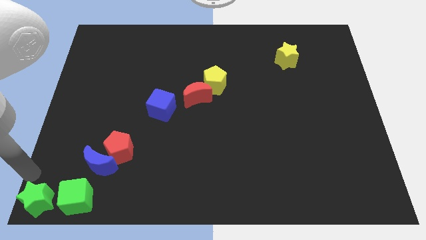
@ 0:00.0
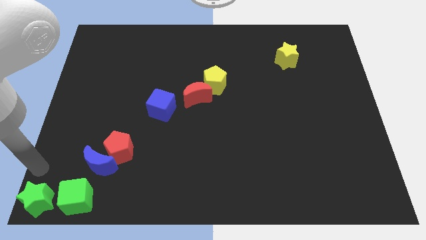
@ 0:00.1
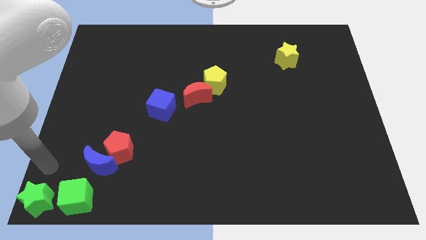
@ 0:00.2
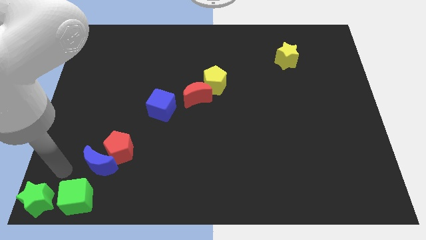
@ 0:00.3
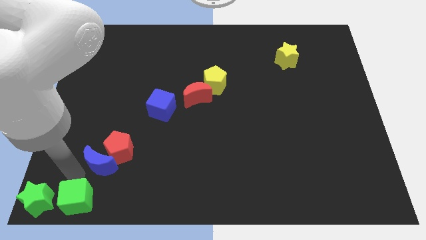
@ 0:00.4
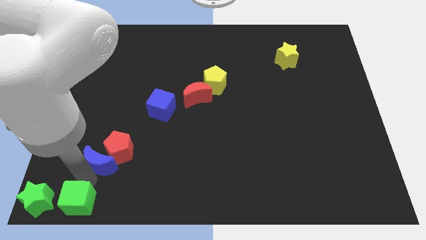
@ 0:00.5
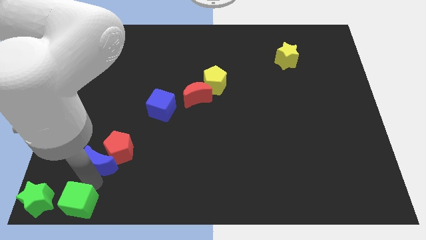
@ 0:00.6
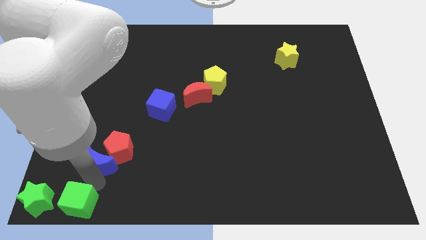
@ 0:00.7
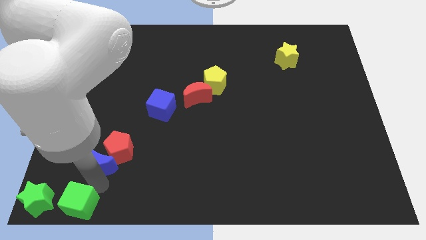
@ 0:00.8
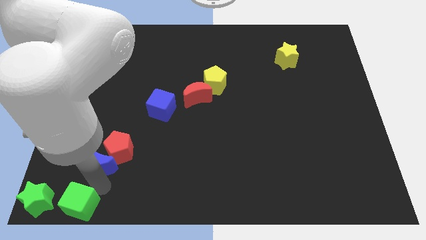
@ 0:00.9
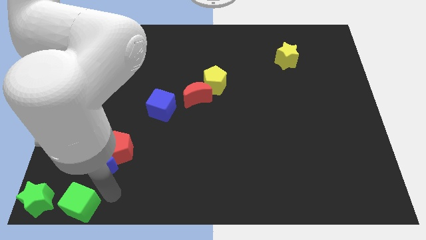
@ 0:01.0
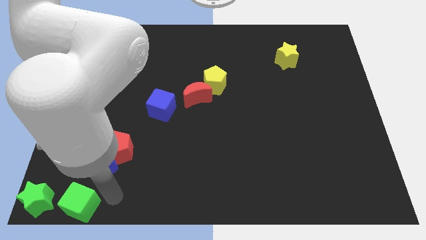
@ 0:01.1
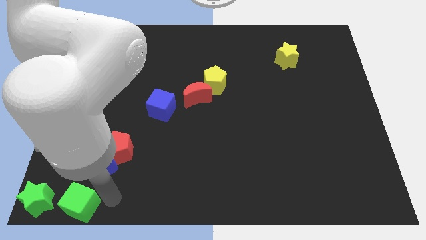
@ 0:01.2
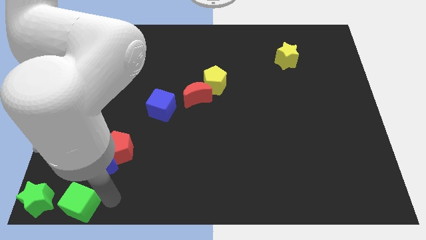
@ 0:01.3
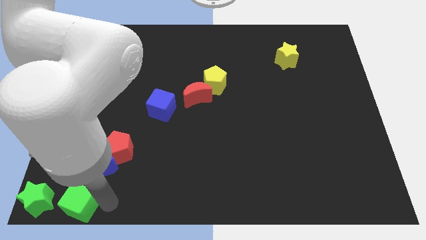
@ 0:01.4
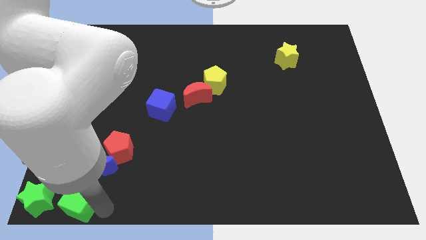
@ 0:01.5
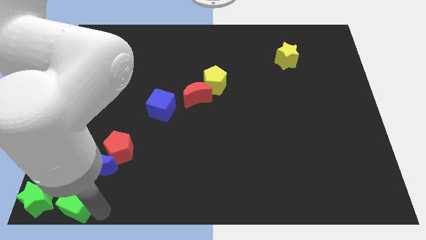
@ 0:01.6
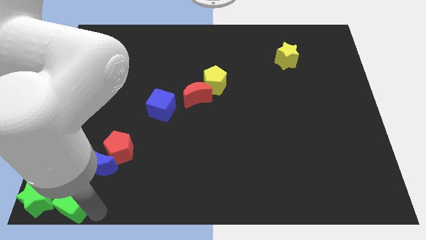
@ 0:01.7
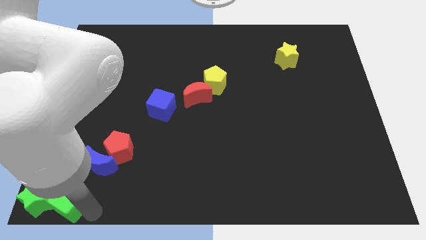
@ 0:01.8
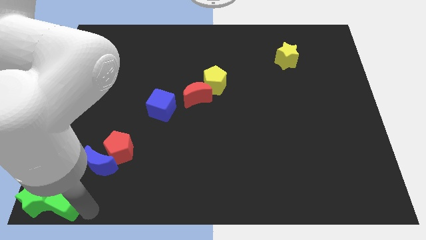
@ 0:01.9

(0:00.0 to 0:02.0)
push the green cube close to the green star

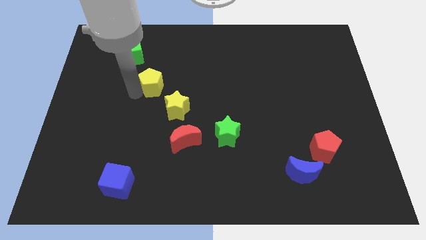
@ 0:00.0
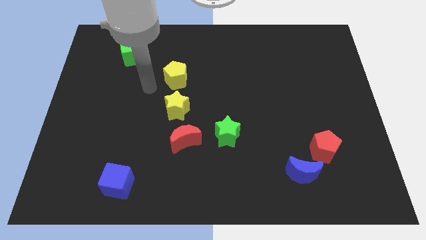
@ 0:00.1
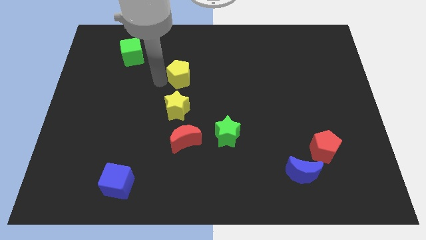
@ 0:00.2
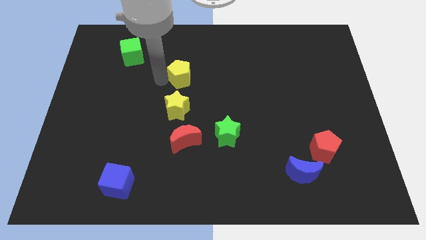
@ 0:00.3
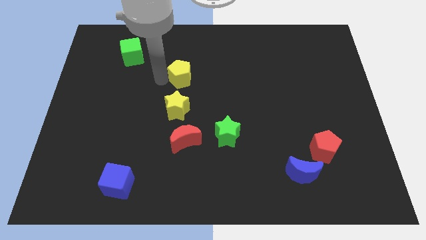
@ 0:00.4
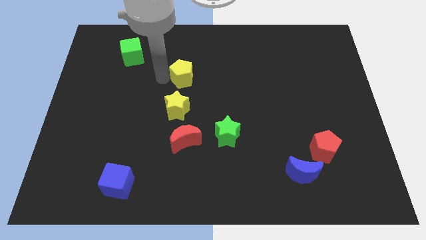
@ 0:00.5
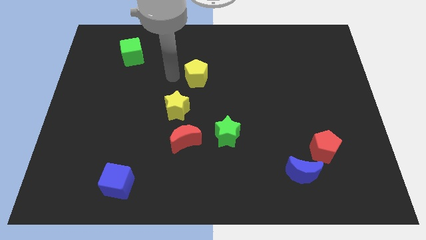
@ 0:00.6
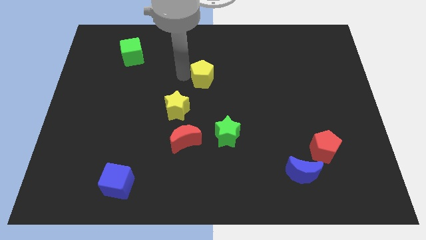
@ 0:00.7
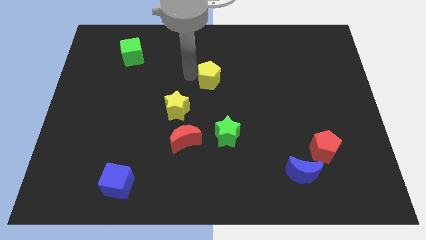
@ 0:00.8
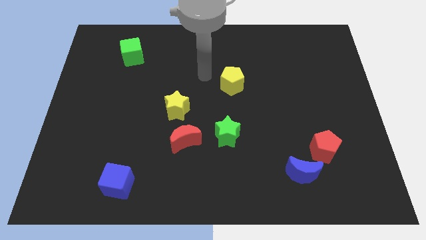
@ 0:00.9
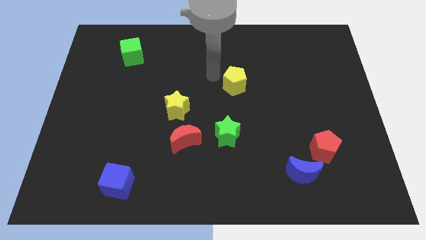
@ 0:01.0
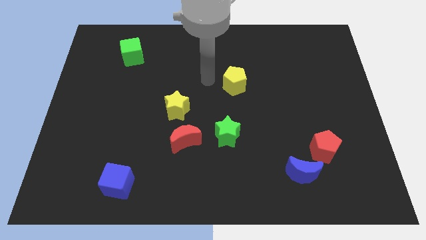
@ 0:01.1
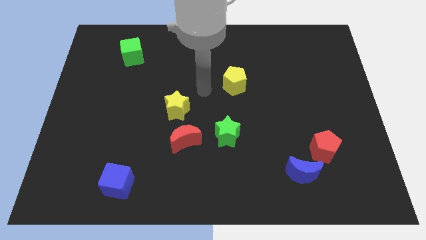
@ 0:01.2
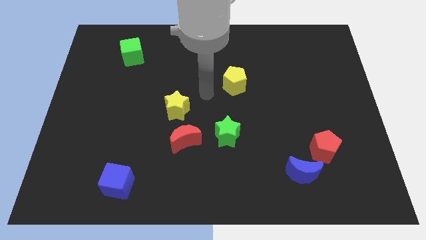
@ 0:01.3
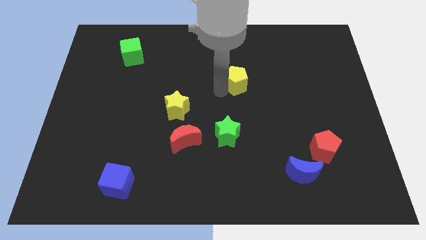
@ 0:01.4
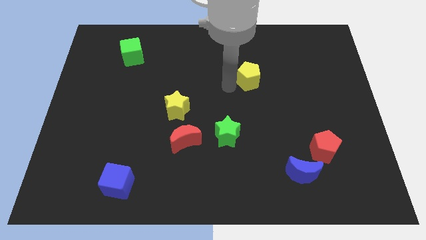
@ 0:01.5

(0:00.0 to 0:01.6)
slightly move the yellow pentagon towards the top right side of the board

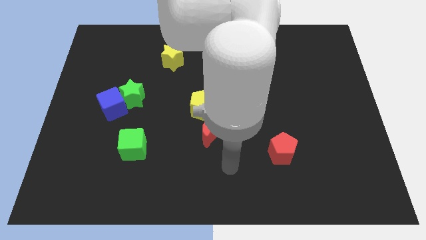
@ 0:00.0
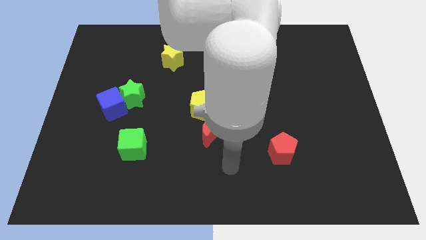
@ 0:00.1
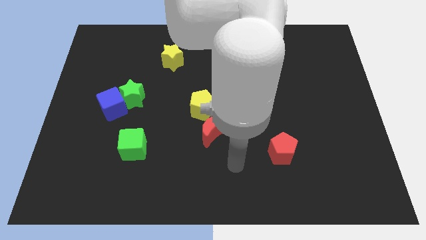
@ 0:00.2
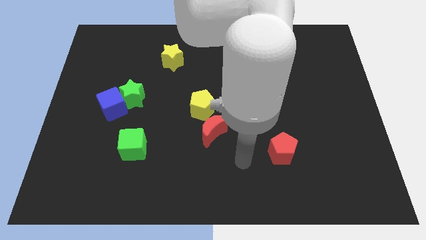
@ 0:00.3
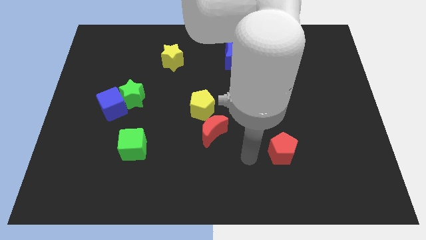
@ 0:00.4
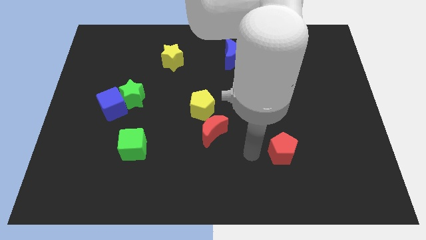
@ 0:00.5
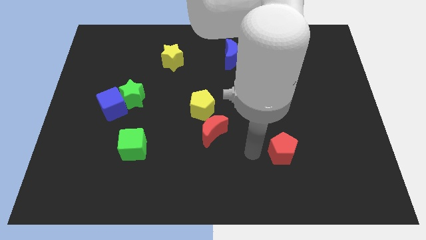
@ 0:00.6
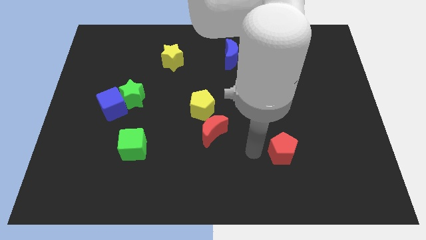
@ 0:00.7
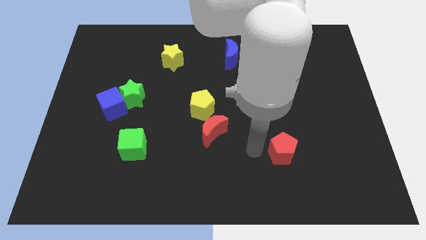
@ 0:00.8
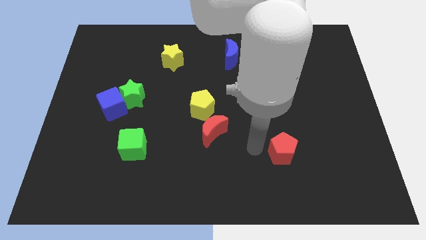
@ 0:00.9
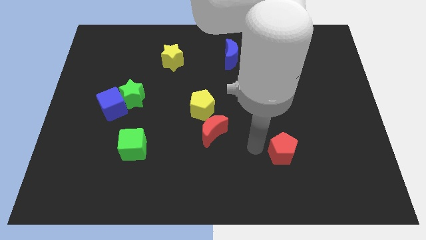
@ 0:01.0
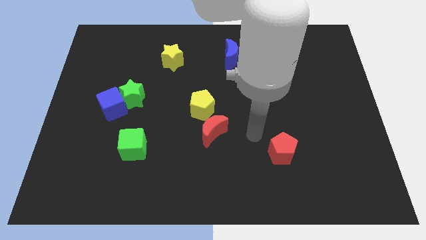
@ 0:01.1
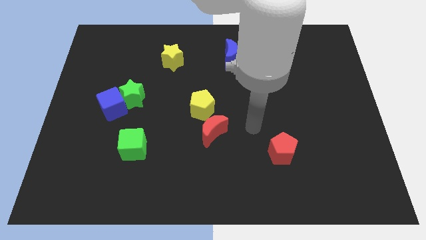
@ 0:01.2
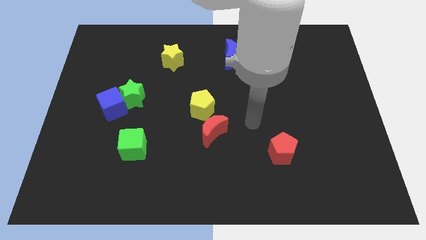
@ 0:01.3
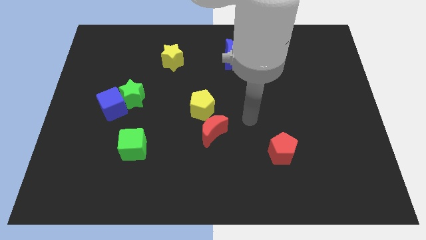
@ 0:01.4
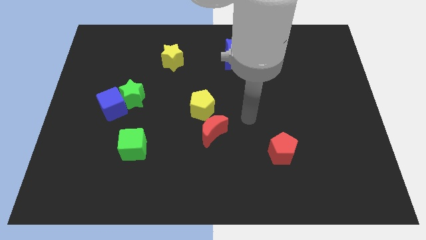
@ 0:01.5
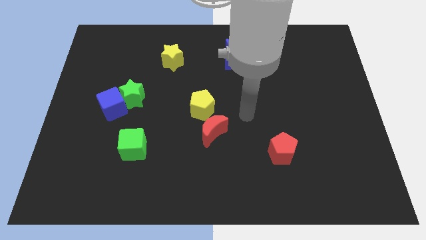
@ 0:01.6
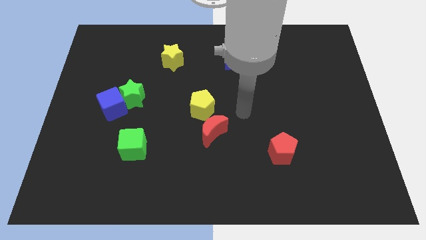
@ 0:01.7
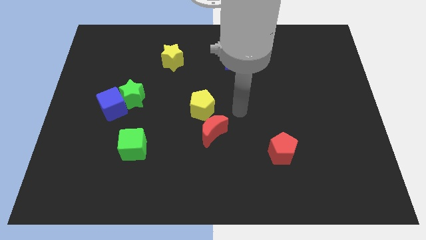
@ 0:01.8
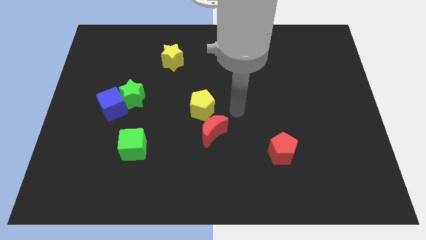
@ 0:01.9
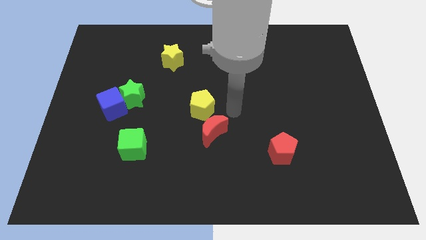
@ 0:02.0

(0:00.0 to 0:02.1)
move your hand to the right of the yellow pentagon

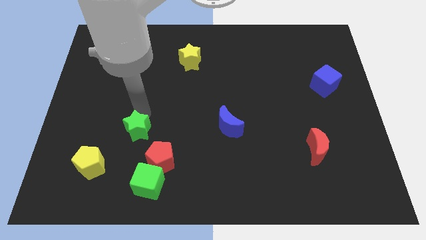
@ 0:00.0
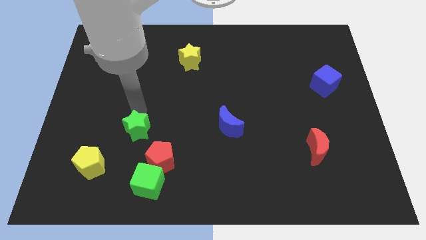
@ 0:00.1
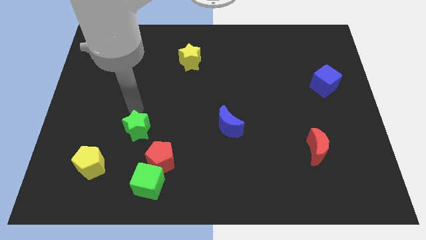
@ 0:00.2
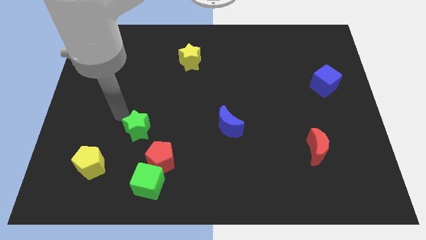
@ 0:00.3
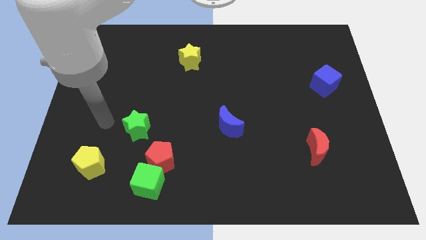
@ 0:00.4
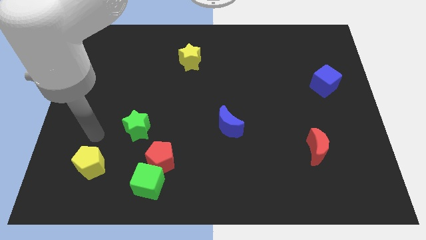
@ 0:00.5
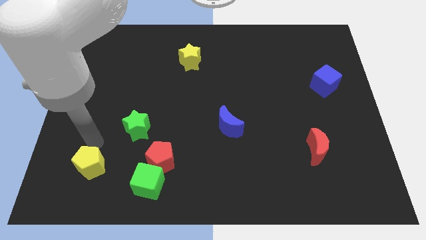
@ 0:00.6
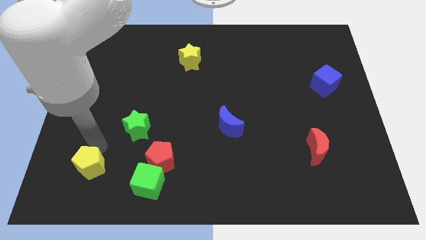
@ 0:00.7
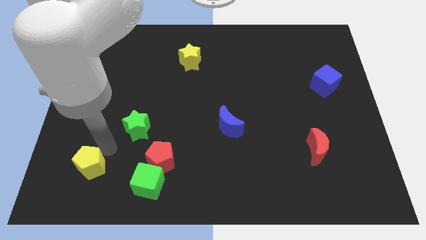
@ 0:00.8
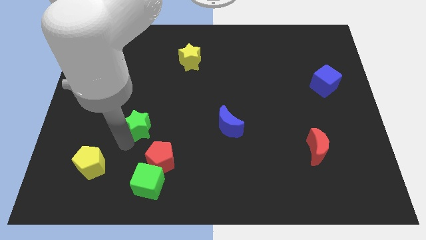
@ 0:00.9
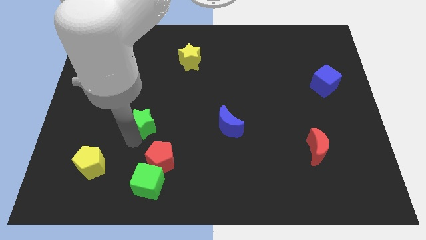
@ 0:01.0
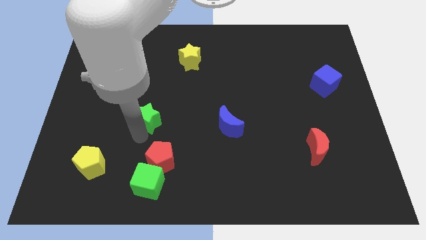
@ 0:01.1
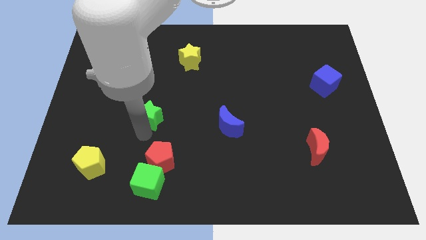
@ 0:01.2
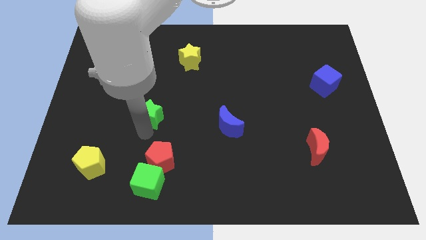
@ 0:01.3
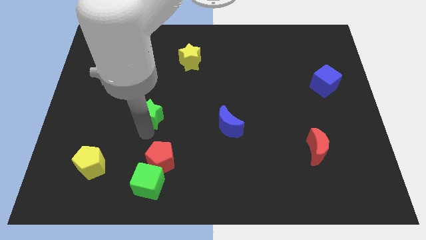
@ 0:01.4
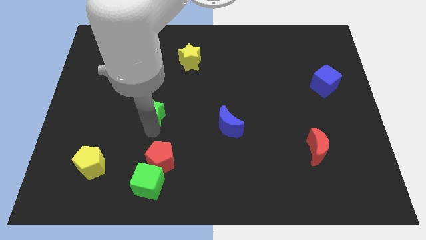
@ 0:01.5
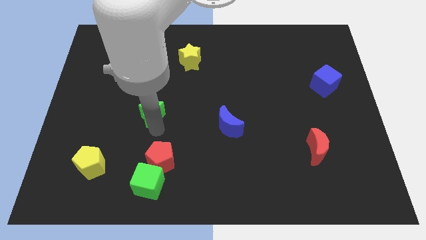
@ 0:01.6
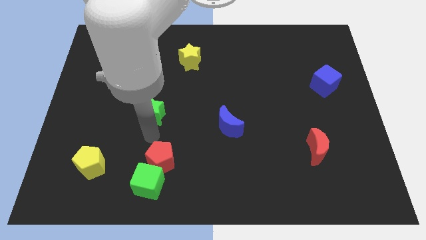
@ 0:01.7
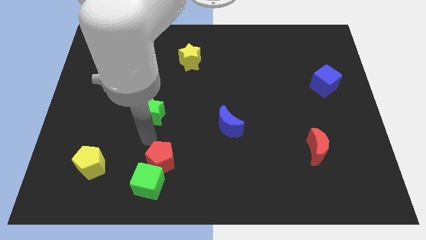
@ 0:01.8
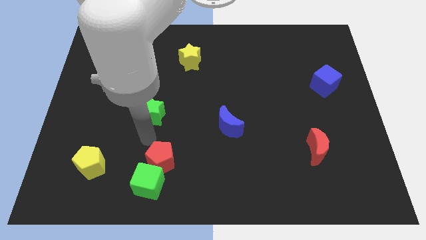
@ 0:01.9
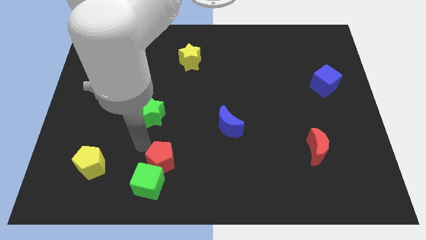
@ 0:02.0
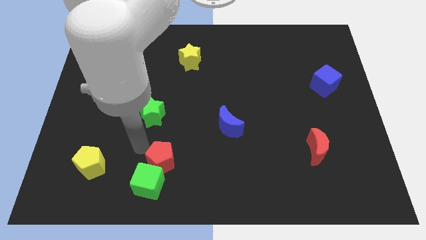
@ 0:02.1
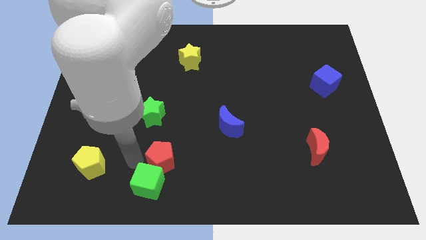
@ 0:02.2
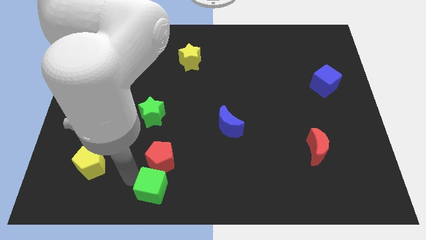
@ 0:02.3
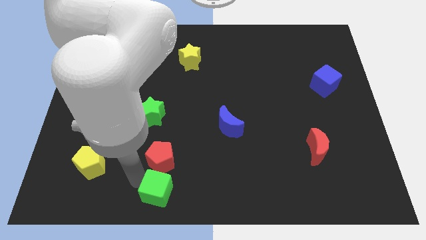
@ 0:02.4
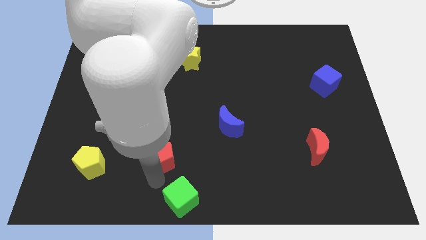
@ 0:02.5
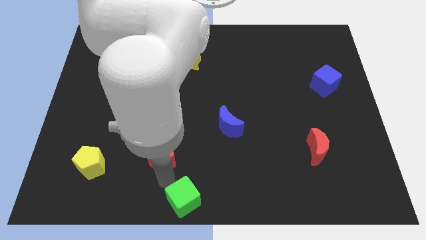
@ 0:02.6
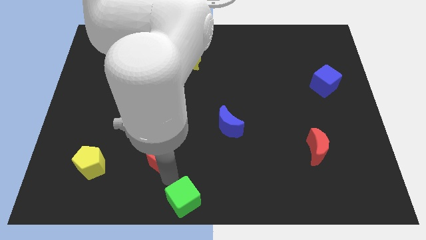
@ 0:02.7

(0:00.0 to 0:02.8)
push the green cube to the bottom of the board

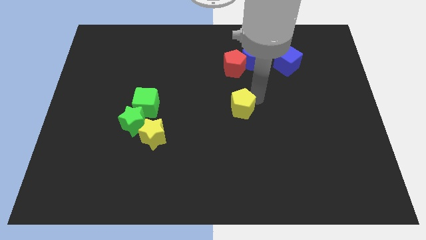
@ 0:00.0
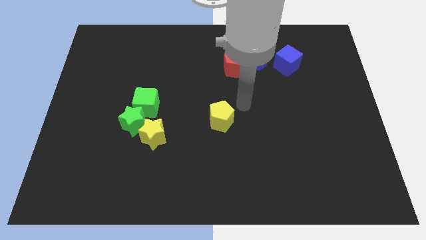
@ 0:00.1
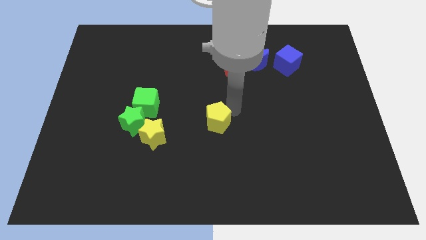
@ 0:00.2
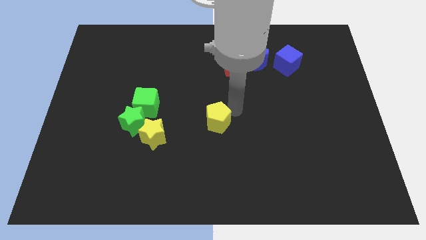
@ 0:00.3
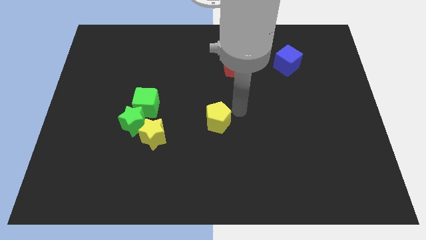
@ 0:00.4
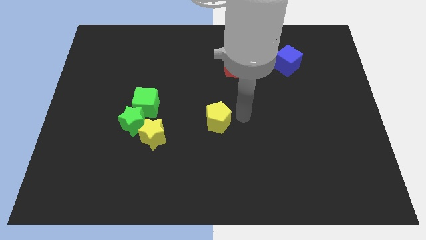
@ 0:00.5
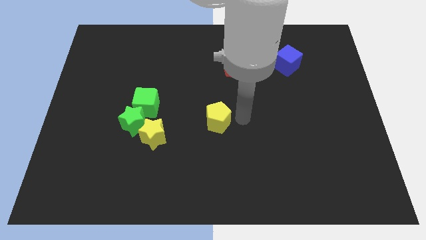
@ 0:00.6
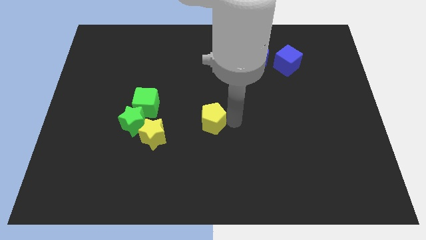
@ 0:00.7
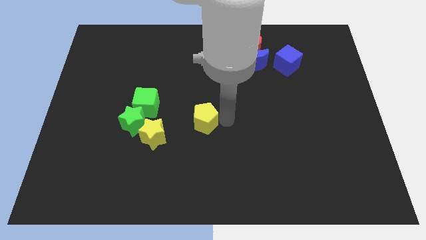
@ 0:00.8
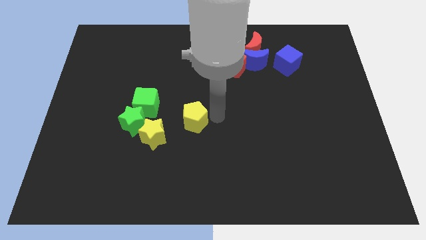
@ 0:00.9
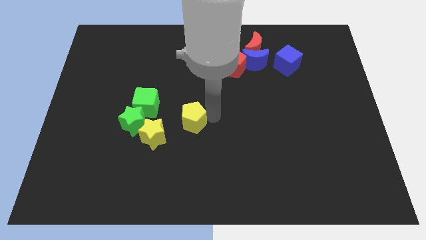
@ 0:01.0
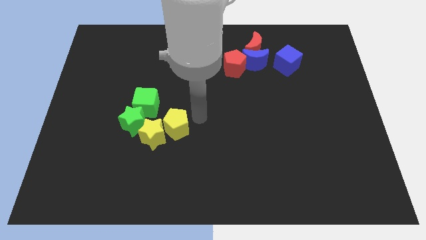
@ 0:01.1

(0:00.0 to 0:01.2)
move the yellow pentagon to the right side of the yellow star
